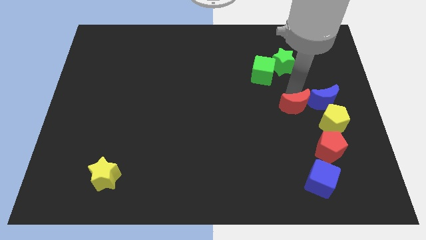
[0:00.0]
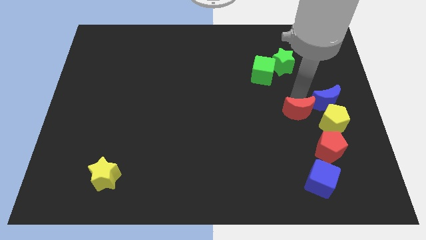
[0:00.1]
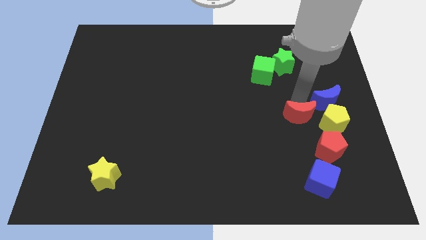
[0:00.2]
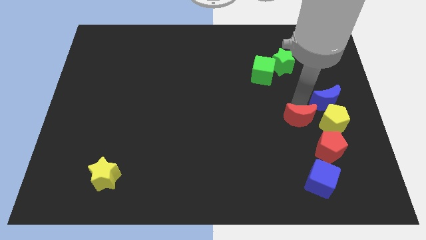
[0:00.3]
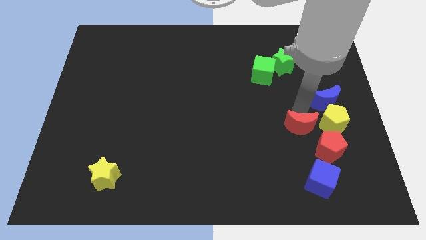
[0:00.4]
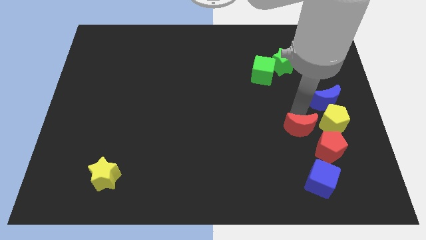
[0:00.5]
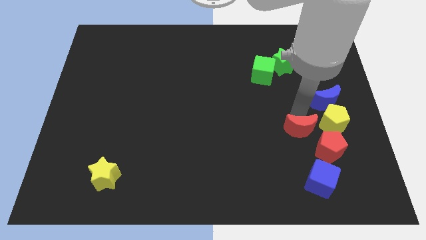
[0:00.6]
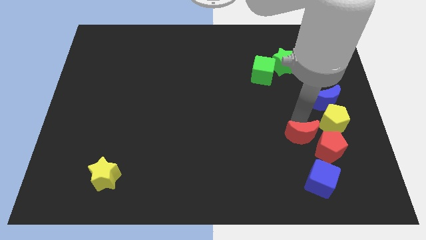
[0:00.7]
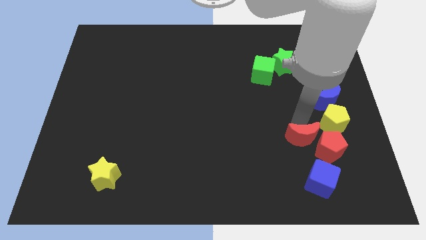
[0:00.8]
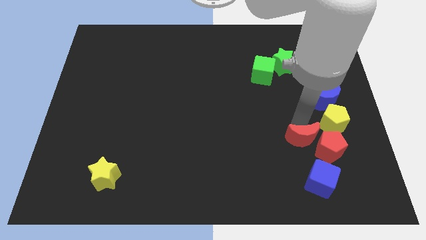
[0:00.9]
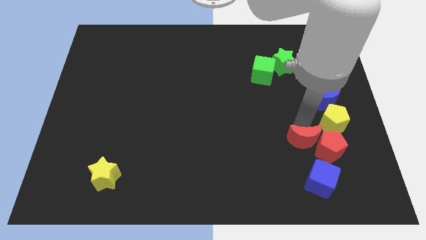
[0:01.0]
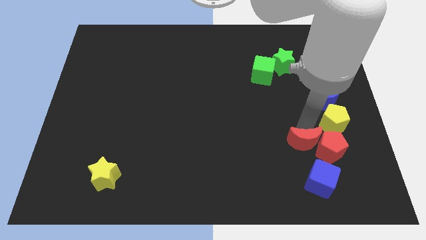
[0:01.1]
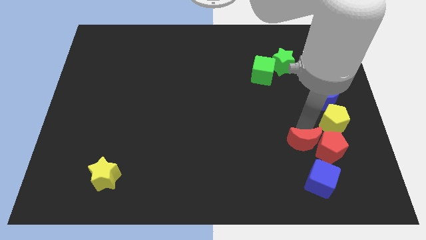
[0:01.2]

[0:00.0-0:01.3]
put the red moon diagonally bottom left to the blue moon

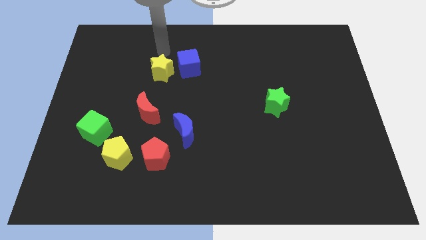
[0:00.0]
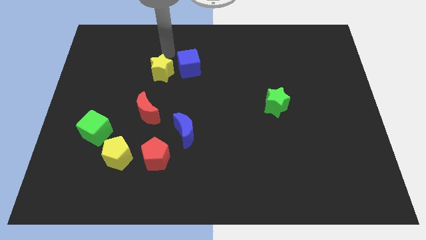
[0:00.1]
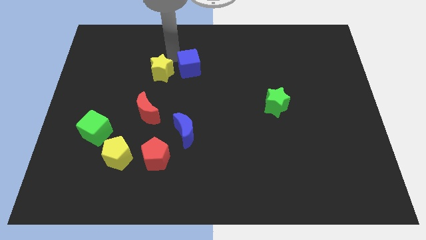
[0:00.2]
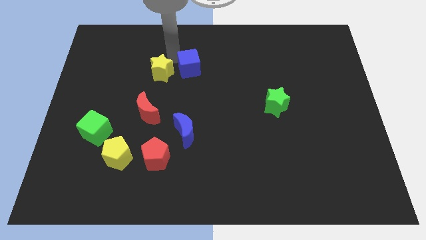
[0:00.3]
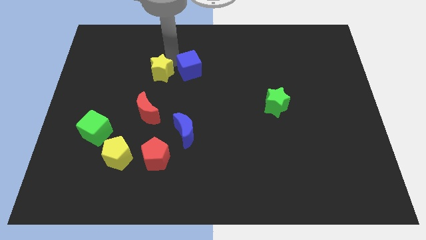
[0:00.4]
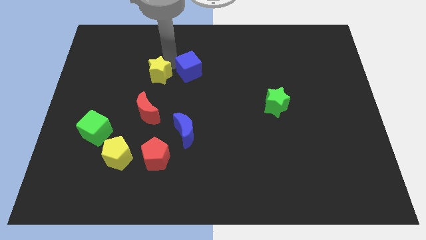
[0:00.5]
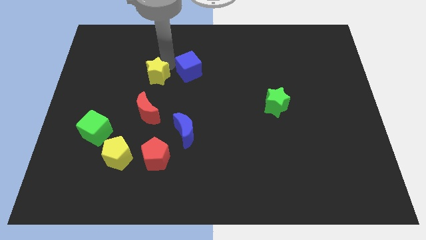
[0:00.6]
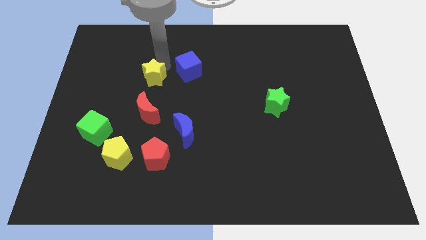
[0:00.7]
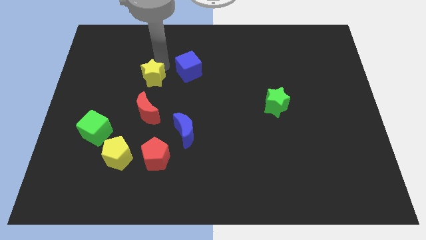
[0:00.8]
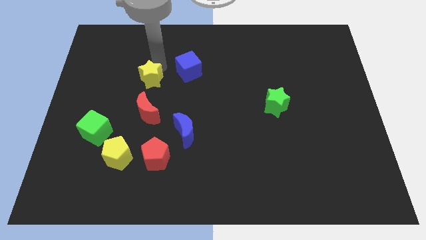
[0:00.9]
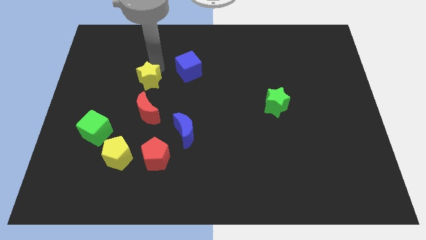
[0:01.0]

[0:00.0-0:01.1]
move the yellow star above the red crescent

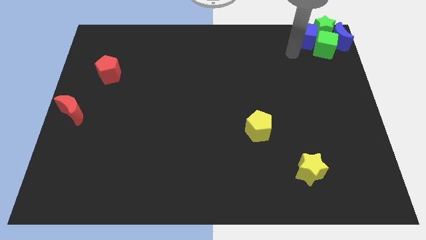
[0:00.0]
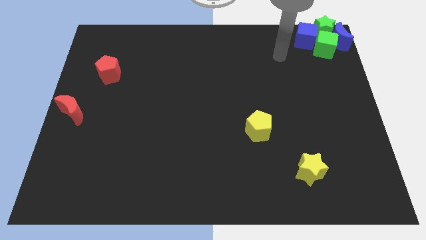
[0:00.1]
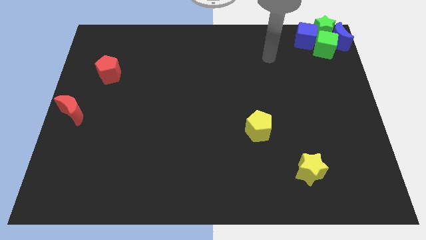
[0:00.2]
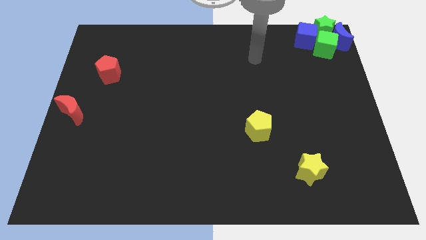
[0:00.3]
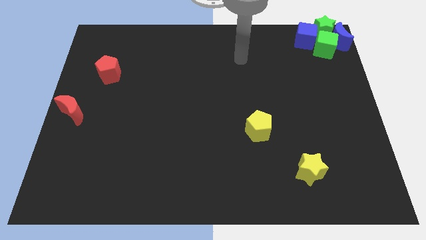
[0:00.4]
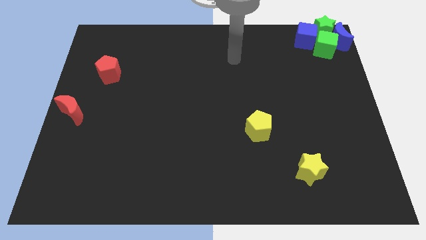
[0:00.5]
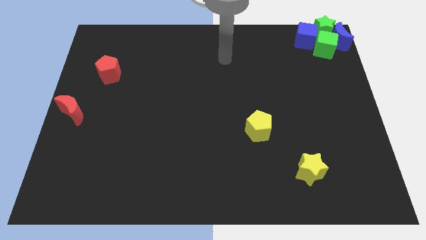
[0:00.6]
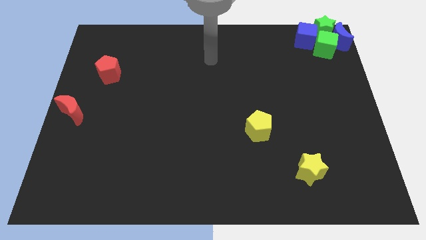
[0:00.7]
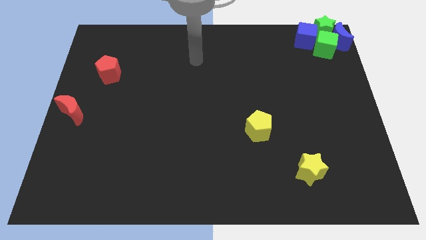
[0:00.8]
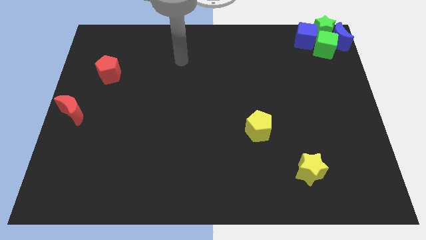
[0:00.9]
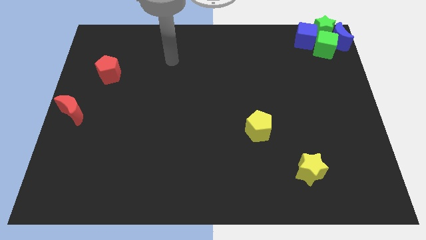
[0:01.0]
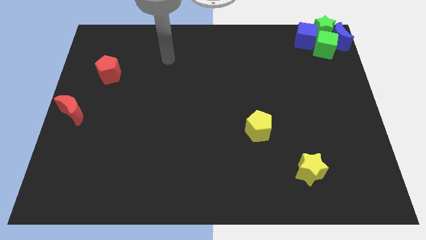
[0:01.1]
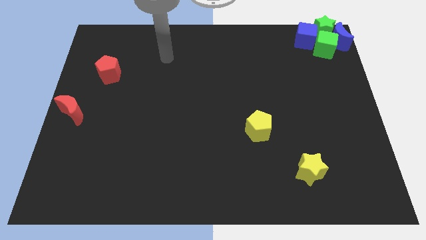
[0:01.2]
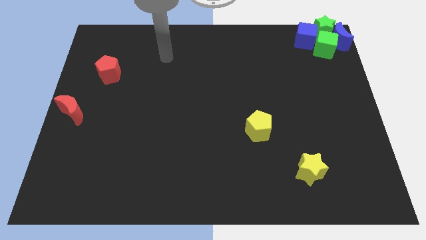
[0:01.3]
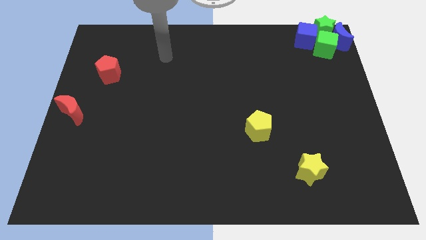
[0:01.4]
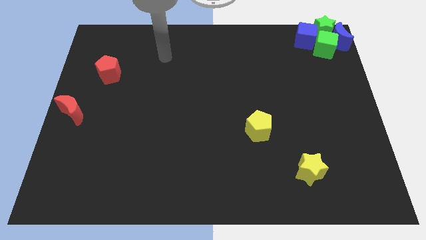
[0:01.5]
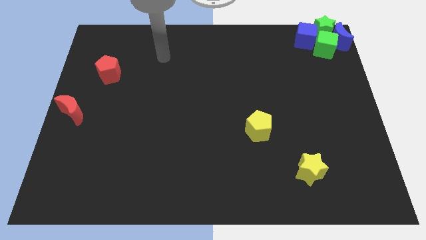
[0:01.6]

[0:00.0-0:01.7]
move yourself away from the blue cube

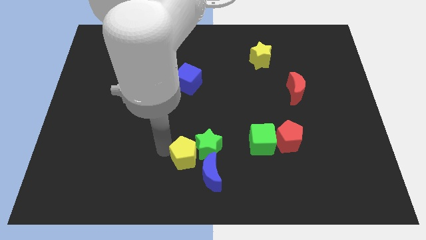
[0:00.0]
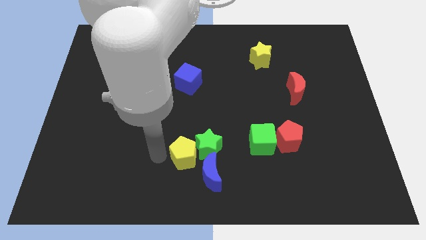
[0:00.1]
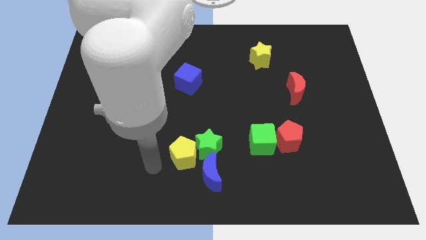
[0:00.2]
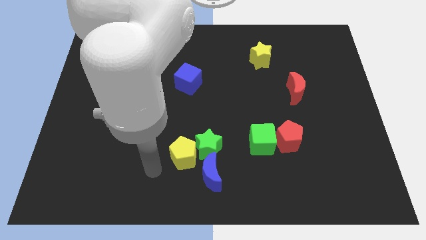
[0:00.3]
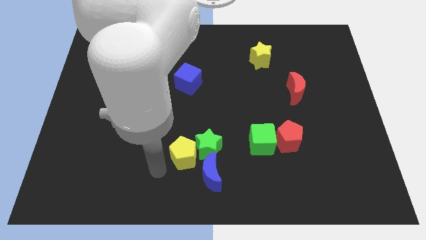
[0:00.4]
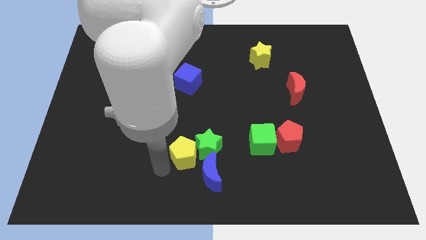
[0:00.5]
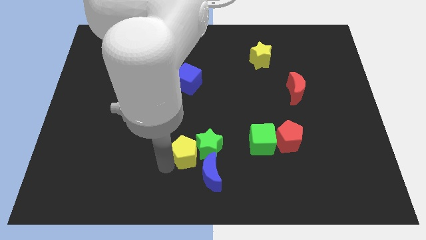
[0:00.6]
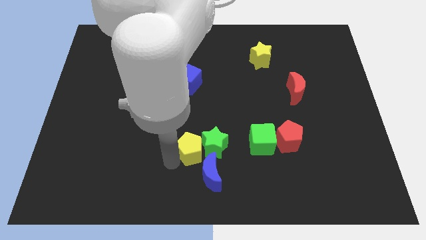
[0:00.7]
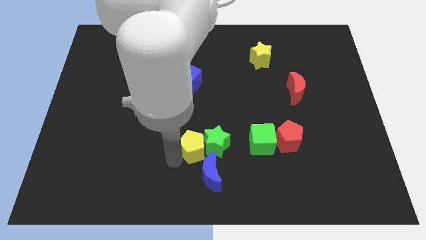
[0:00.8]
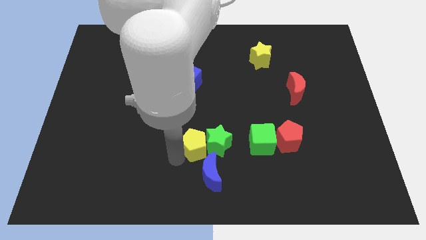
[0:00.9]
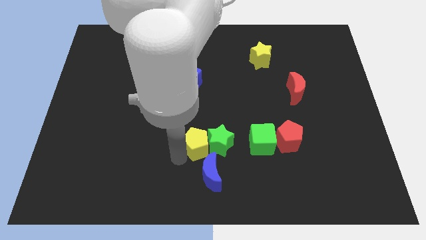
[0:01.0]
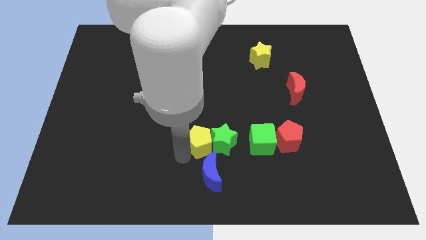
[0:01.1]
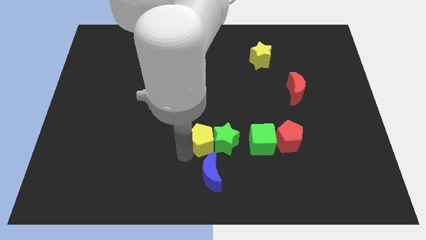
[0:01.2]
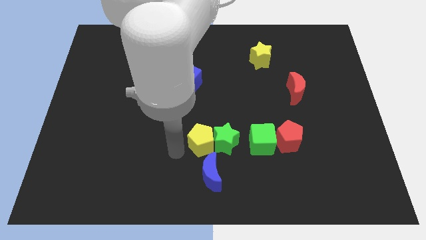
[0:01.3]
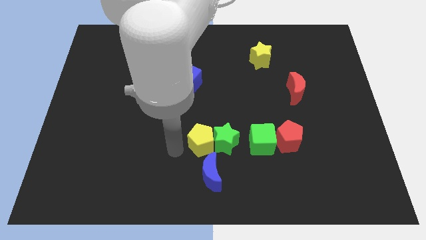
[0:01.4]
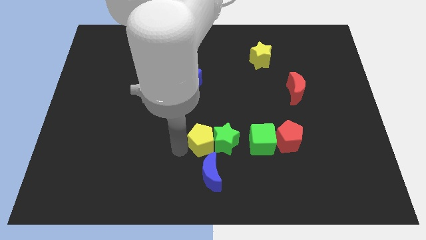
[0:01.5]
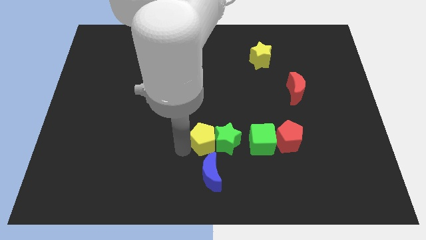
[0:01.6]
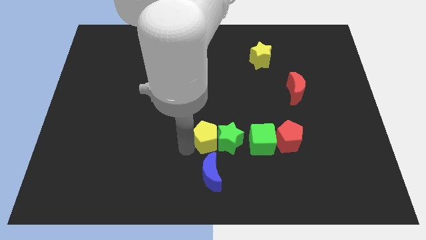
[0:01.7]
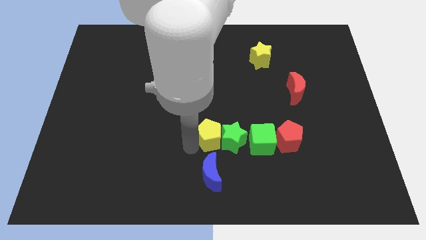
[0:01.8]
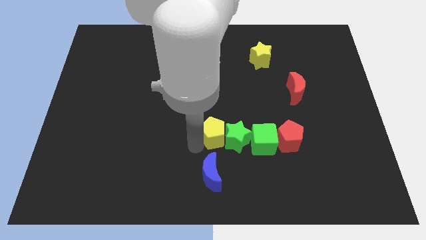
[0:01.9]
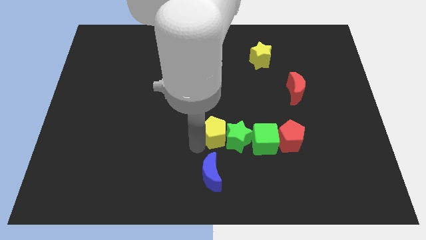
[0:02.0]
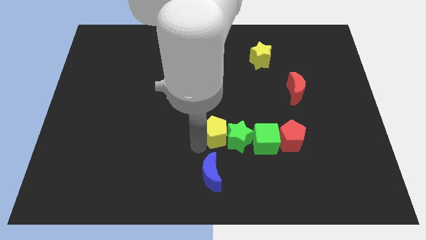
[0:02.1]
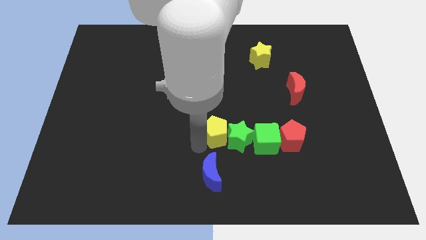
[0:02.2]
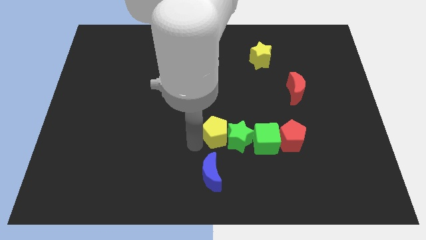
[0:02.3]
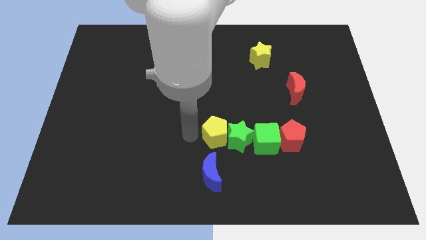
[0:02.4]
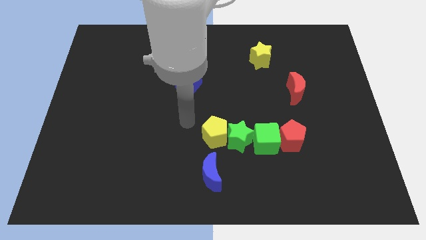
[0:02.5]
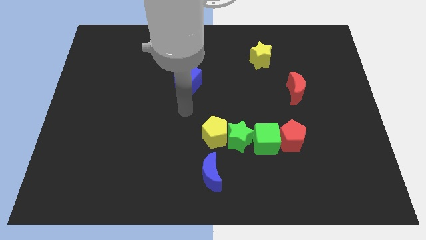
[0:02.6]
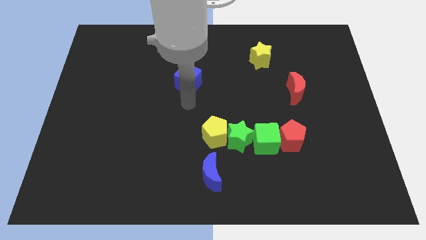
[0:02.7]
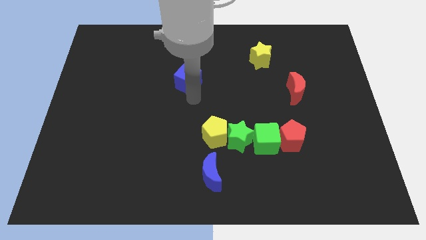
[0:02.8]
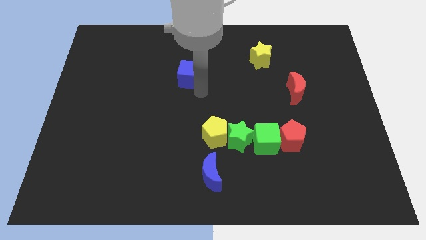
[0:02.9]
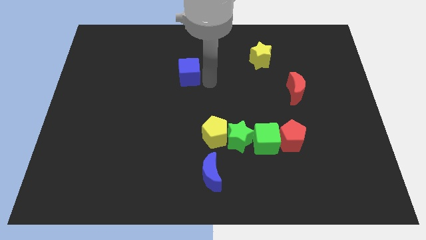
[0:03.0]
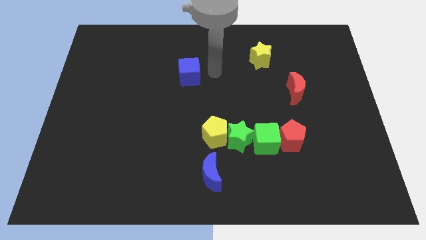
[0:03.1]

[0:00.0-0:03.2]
separate the yellow pentagon and green star from the blue moon

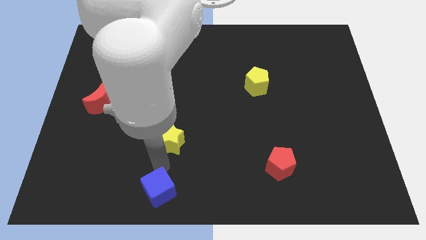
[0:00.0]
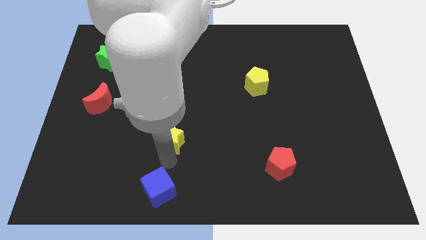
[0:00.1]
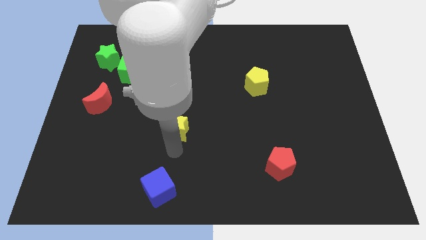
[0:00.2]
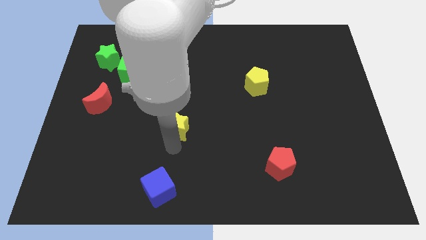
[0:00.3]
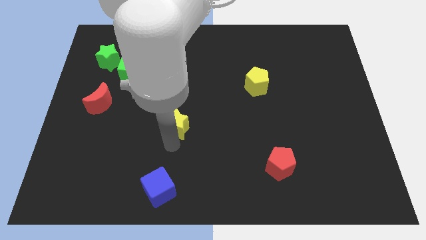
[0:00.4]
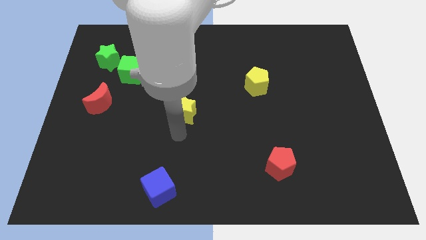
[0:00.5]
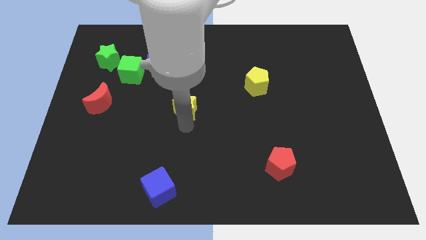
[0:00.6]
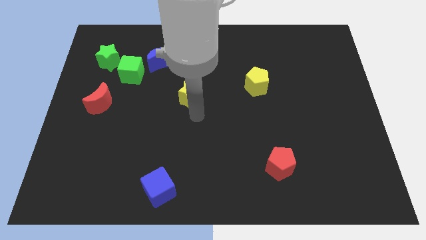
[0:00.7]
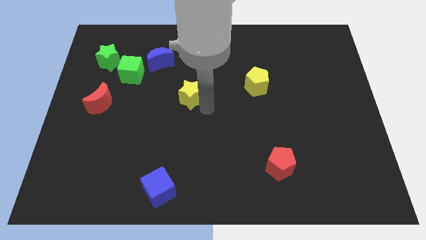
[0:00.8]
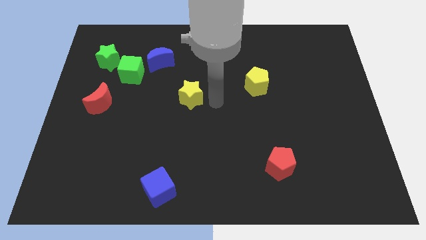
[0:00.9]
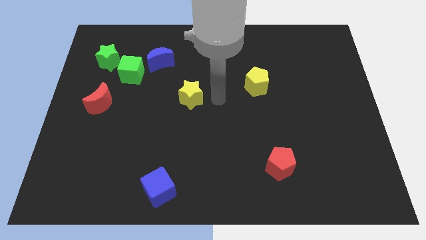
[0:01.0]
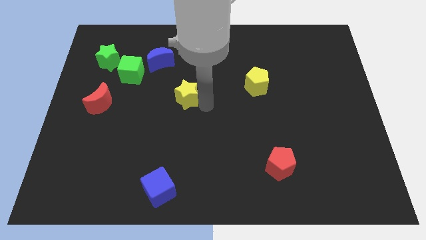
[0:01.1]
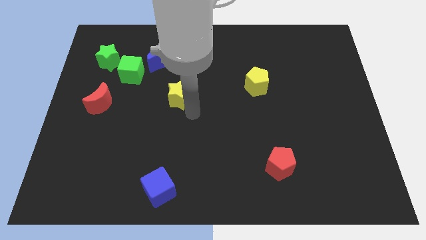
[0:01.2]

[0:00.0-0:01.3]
move the yellow star to the right of the red crescent

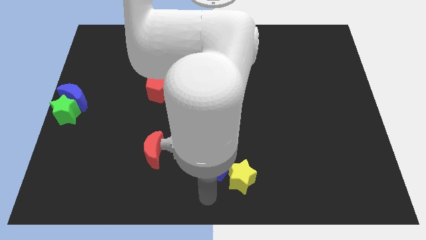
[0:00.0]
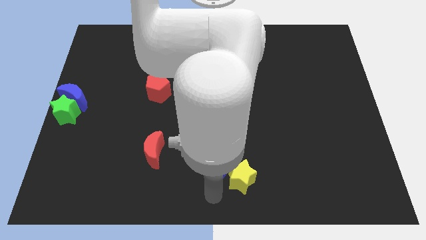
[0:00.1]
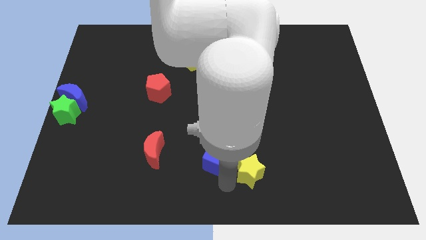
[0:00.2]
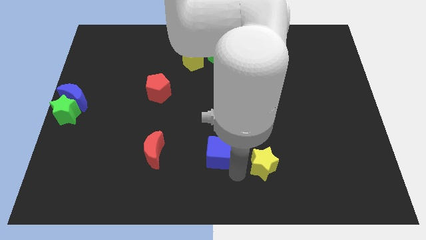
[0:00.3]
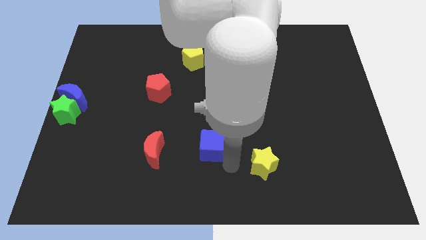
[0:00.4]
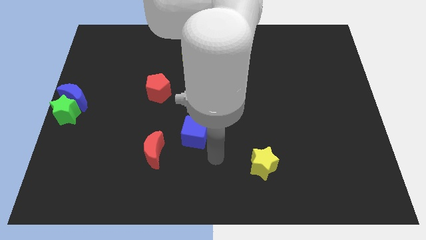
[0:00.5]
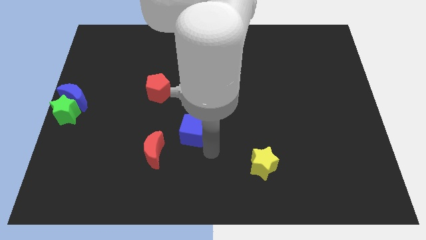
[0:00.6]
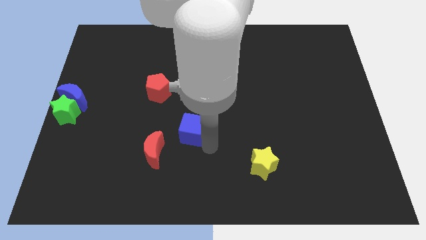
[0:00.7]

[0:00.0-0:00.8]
separate blue cube from yellow star
